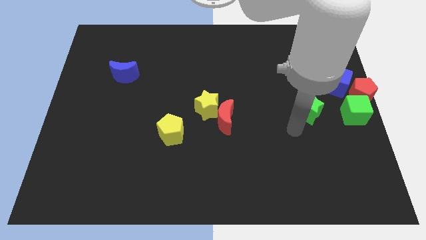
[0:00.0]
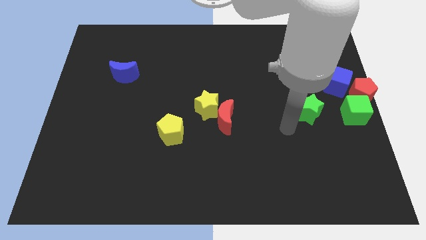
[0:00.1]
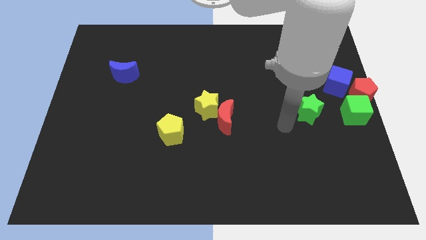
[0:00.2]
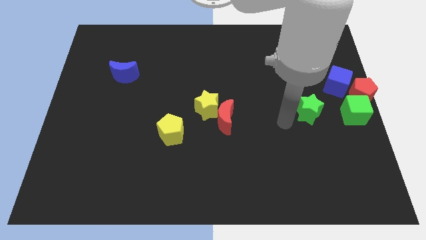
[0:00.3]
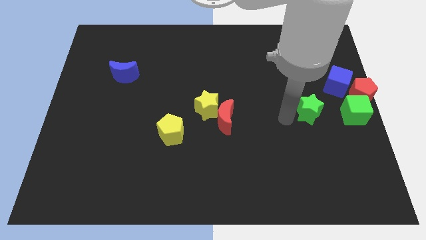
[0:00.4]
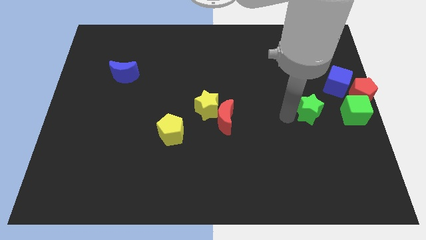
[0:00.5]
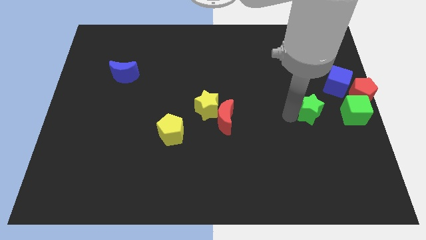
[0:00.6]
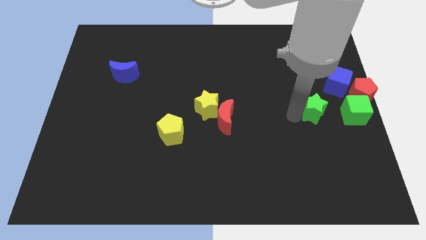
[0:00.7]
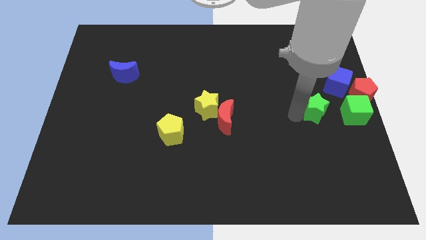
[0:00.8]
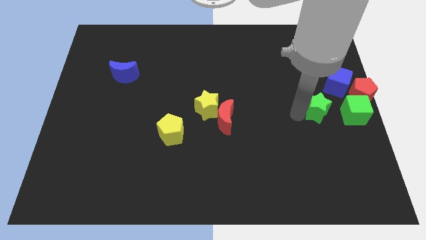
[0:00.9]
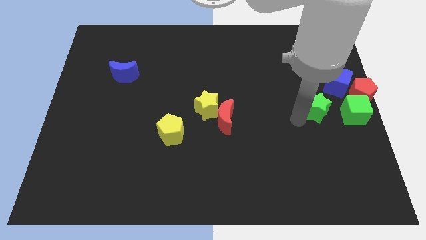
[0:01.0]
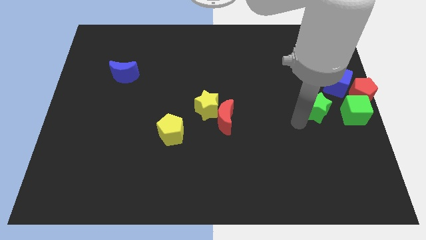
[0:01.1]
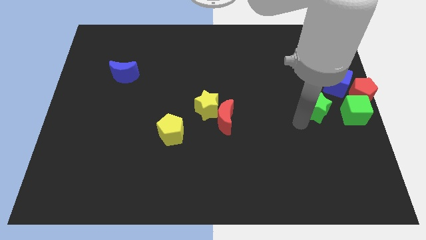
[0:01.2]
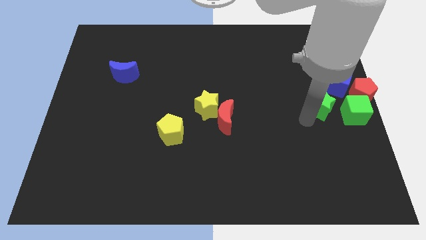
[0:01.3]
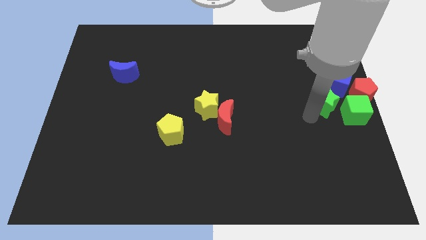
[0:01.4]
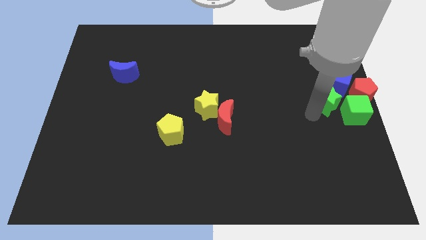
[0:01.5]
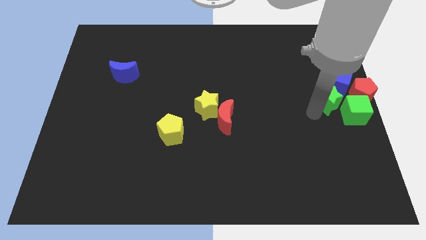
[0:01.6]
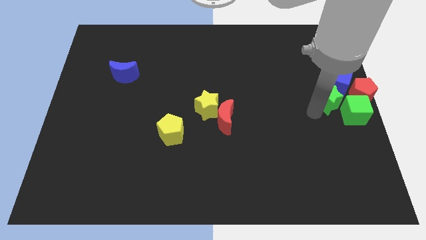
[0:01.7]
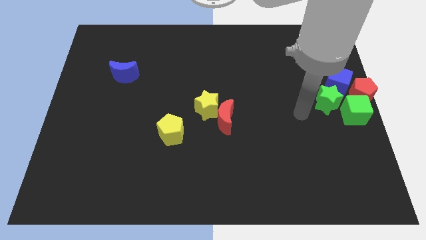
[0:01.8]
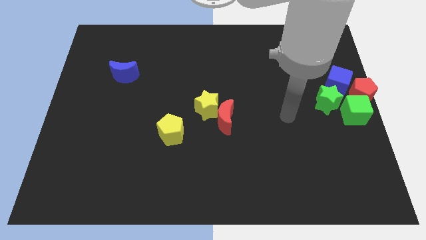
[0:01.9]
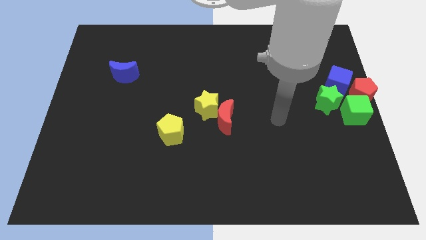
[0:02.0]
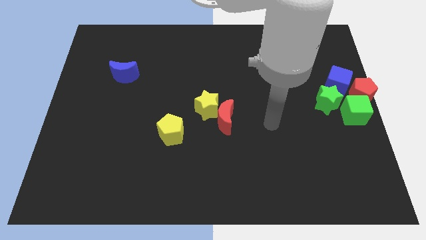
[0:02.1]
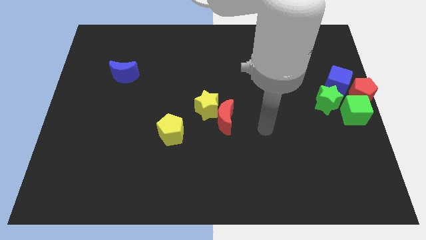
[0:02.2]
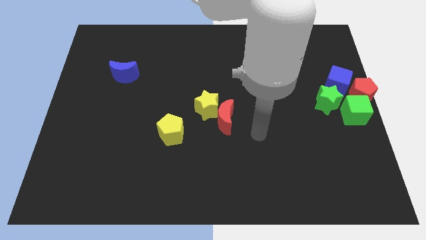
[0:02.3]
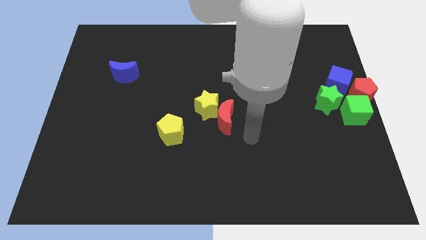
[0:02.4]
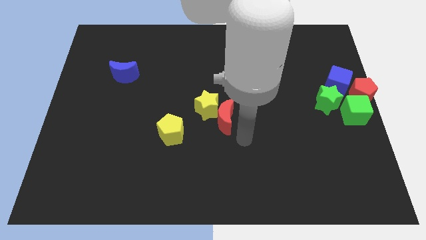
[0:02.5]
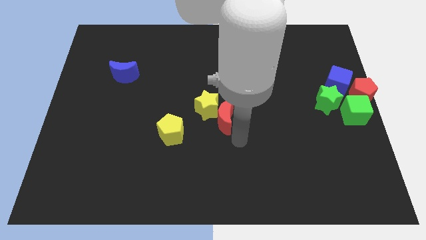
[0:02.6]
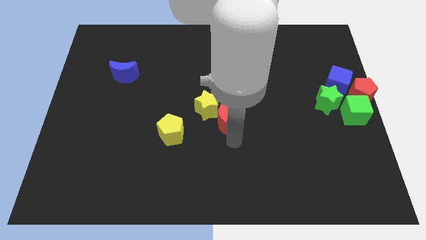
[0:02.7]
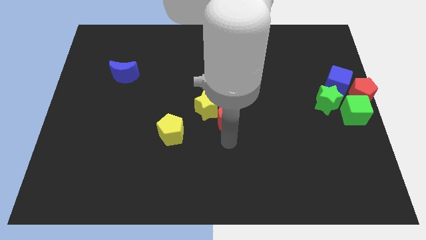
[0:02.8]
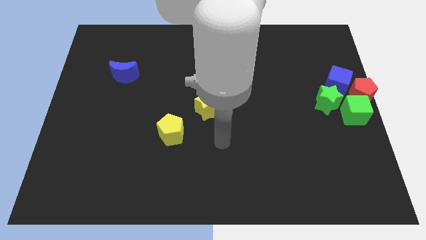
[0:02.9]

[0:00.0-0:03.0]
push the green star diagonal bottom left to the blue cube

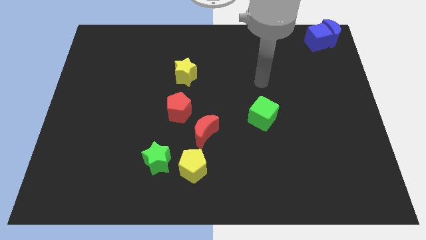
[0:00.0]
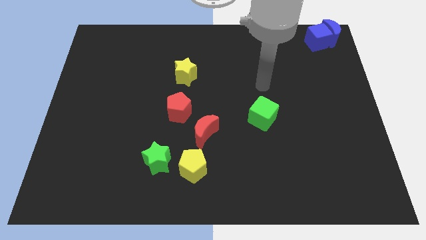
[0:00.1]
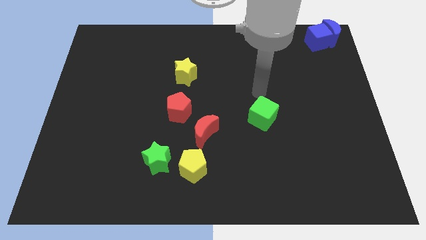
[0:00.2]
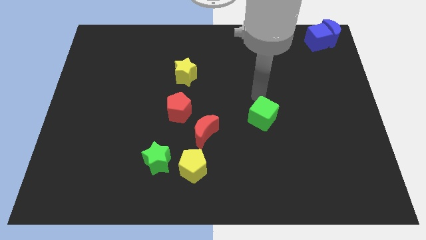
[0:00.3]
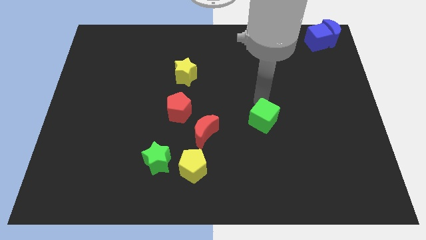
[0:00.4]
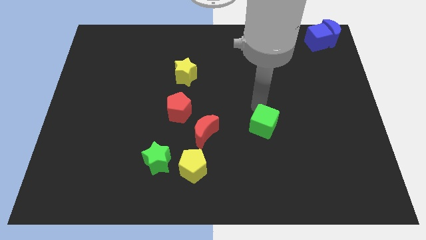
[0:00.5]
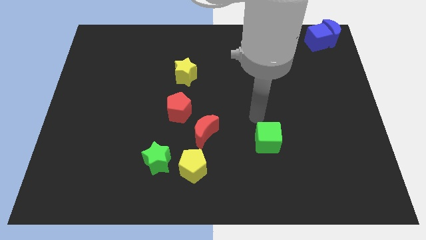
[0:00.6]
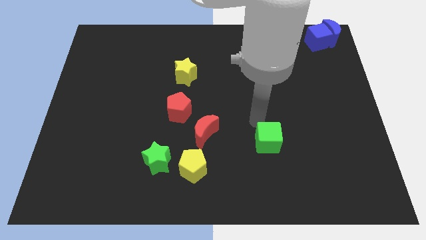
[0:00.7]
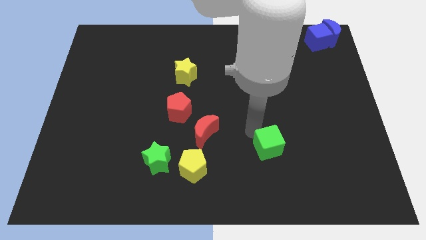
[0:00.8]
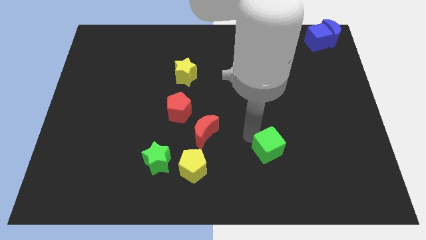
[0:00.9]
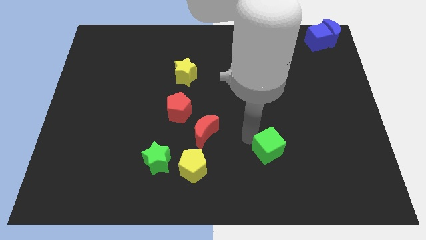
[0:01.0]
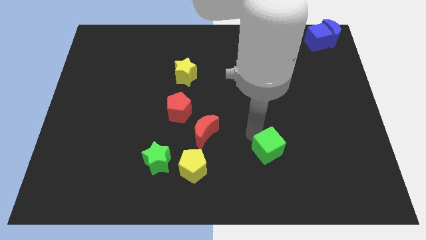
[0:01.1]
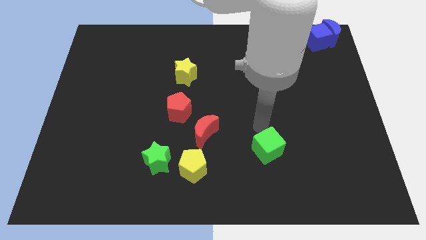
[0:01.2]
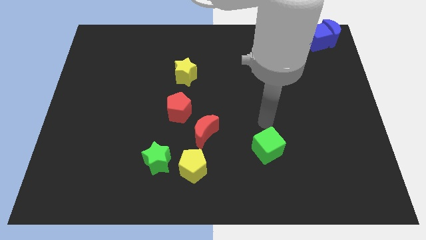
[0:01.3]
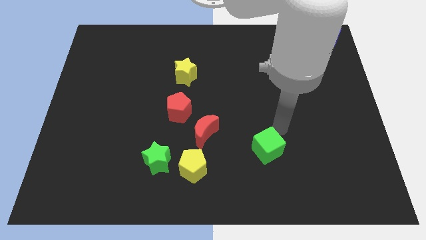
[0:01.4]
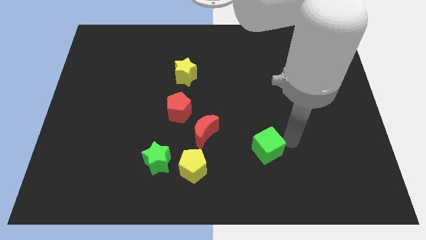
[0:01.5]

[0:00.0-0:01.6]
move green cube to the bottom center

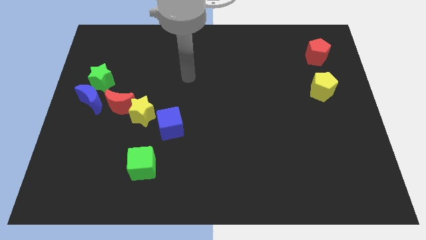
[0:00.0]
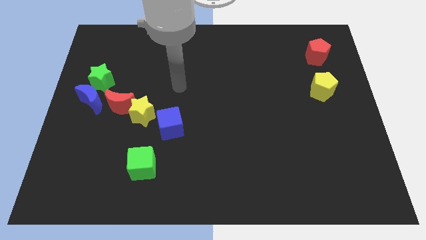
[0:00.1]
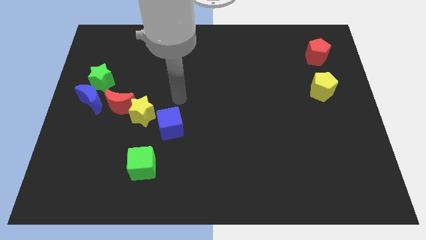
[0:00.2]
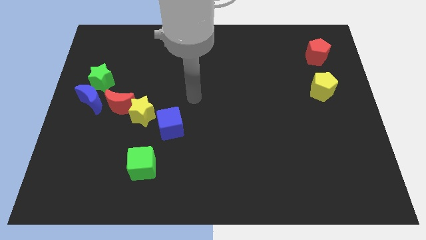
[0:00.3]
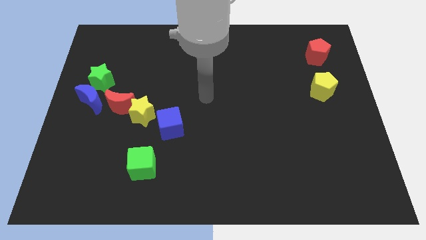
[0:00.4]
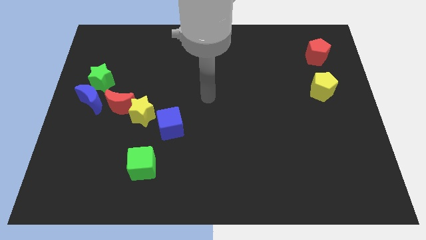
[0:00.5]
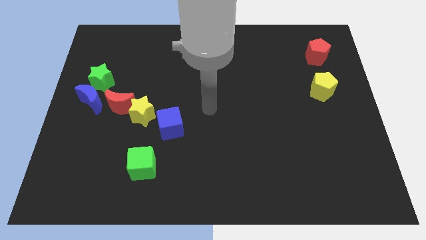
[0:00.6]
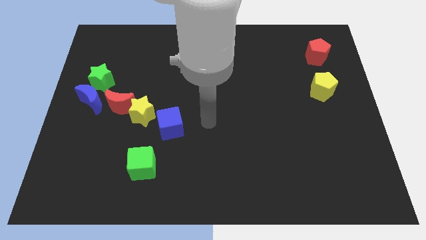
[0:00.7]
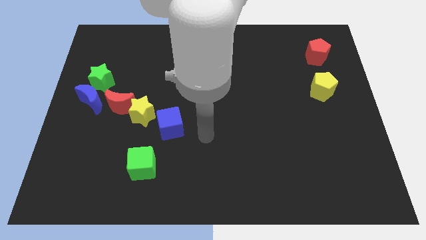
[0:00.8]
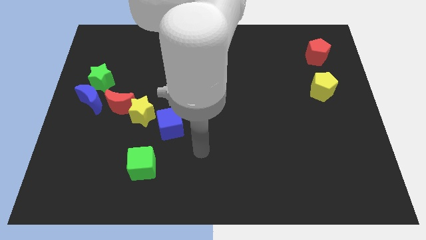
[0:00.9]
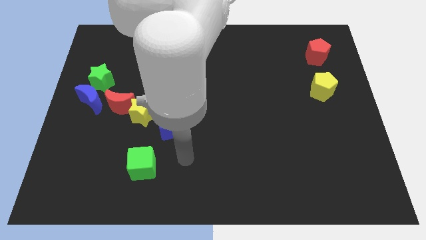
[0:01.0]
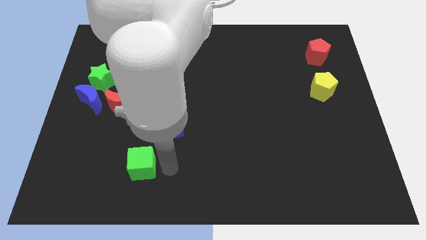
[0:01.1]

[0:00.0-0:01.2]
point your hand below the blue cube

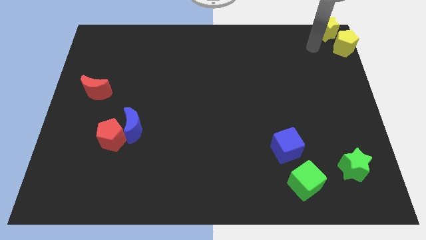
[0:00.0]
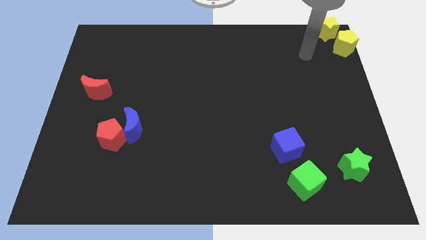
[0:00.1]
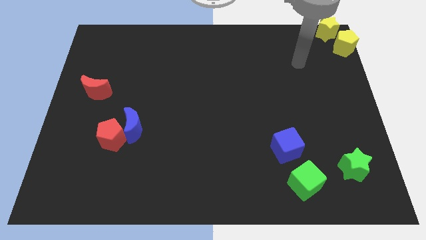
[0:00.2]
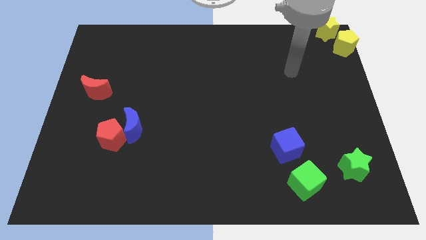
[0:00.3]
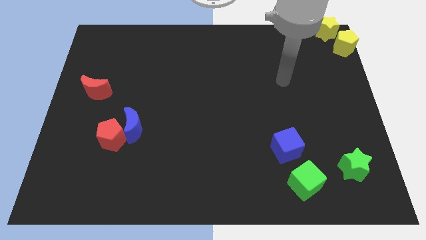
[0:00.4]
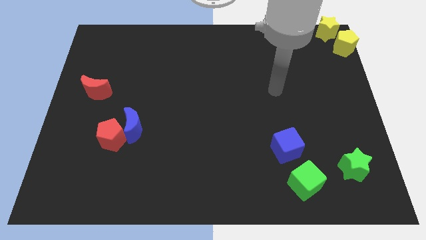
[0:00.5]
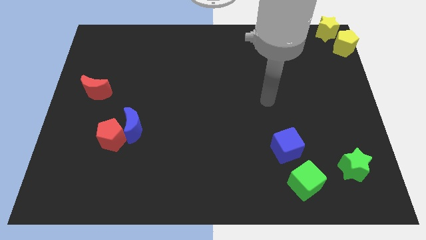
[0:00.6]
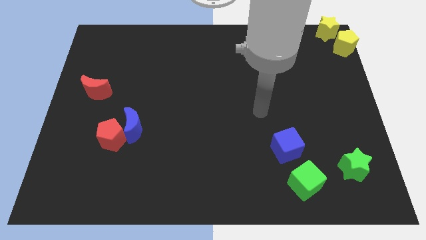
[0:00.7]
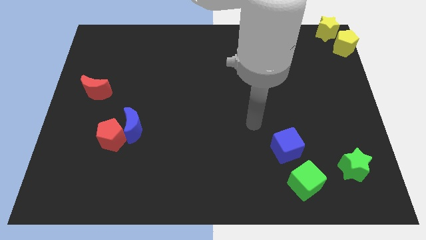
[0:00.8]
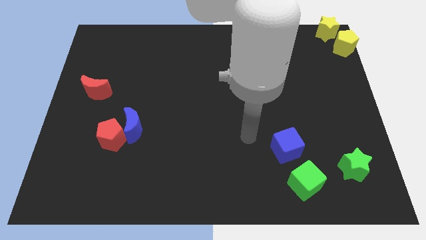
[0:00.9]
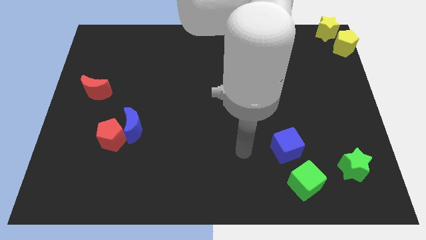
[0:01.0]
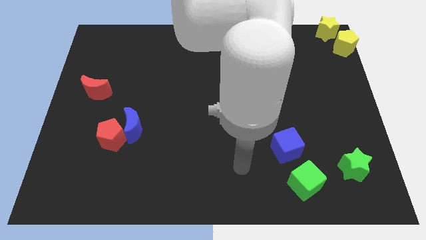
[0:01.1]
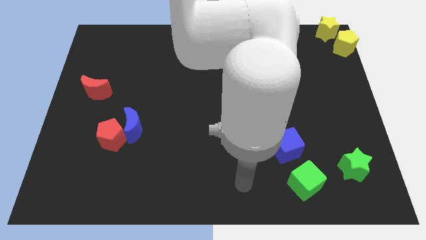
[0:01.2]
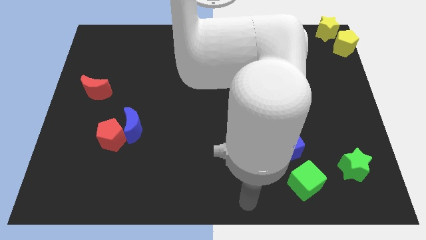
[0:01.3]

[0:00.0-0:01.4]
move arm away from the yellow blocks

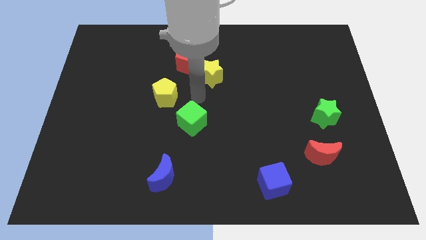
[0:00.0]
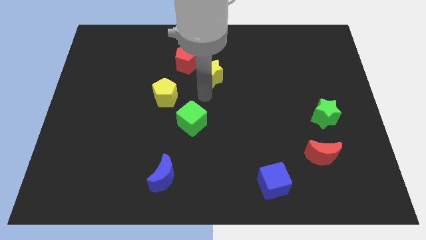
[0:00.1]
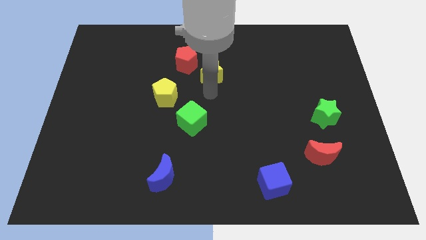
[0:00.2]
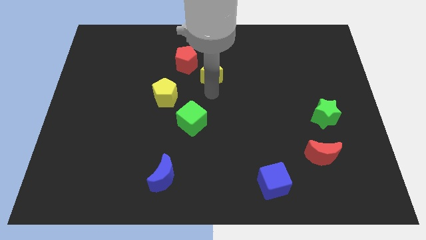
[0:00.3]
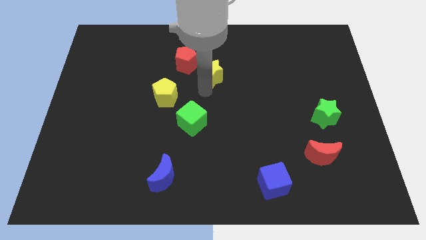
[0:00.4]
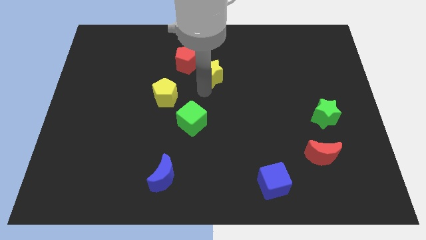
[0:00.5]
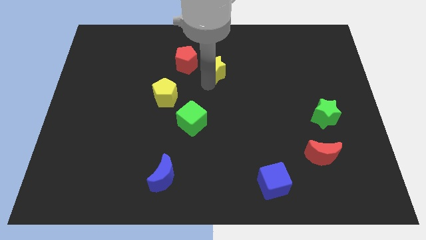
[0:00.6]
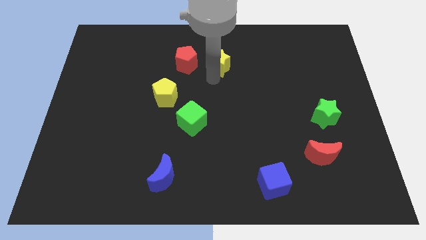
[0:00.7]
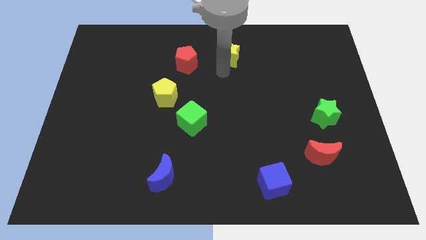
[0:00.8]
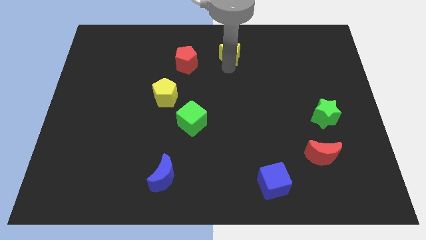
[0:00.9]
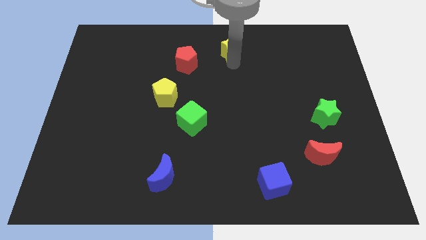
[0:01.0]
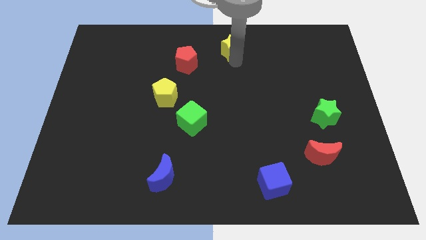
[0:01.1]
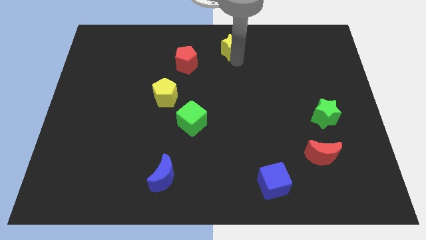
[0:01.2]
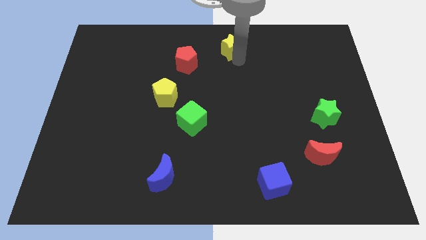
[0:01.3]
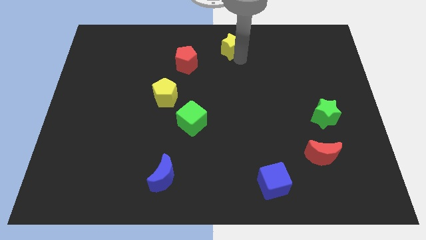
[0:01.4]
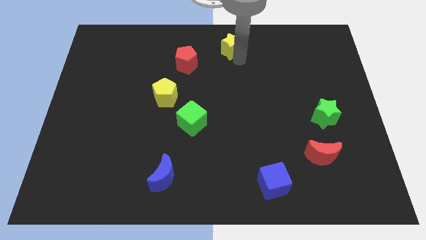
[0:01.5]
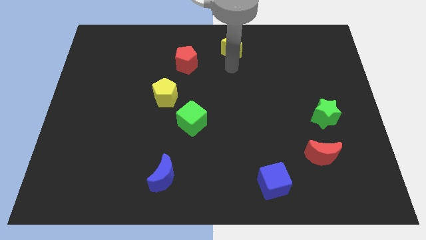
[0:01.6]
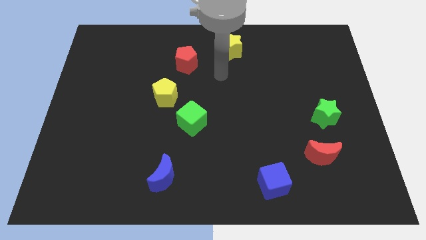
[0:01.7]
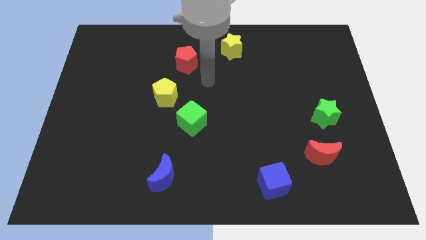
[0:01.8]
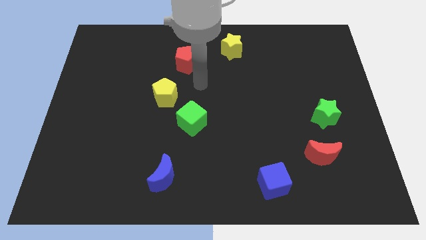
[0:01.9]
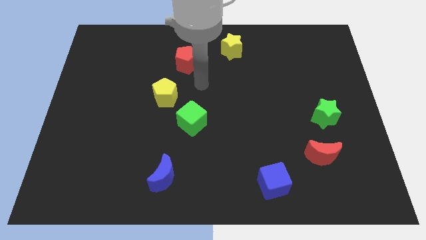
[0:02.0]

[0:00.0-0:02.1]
slide the yellow star towards the top
